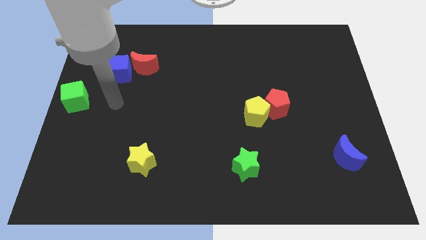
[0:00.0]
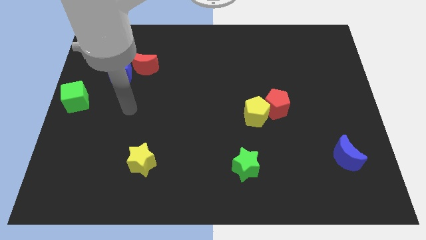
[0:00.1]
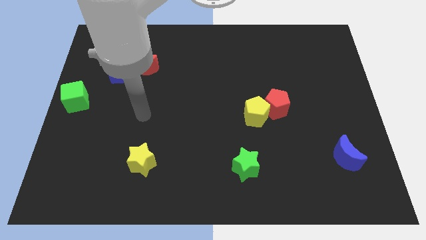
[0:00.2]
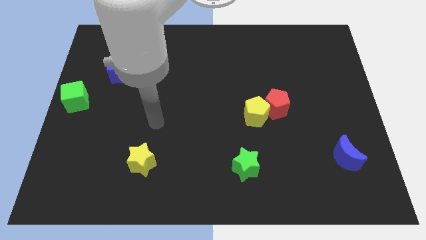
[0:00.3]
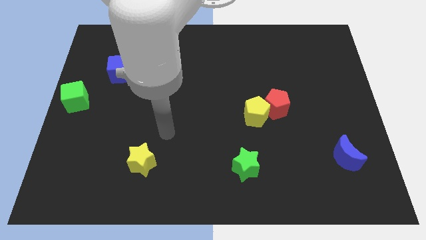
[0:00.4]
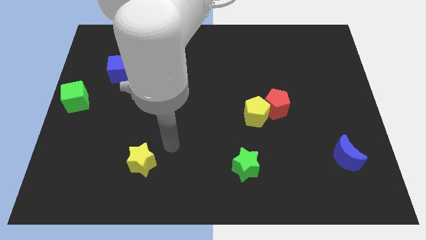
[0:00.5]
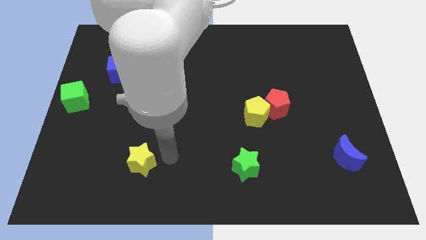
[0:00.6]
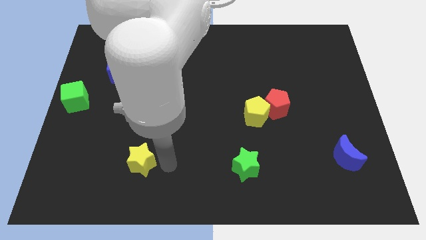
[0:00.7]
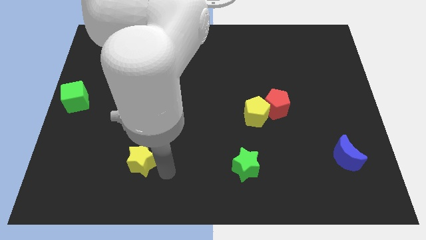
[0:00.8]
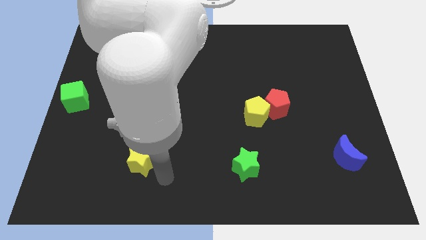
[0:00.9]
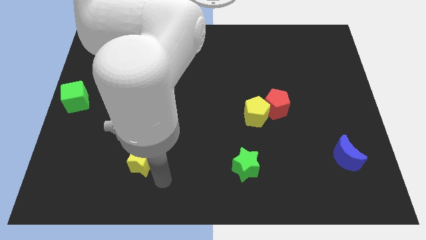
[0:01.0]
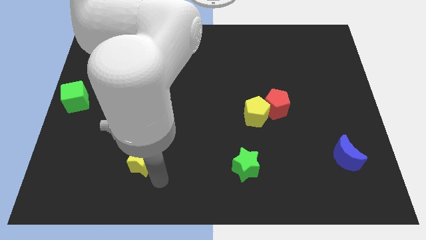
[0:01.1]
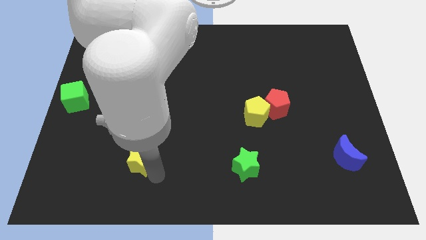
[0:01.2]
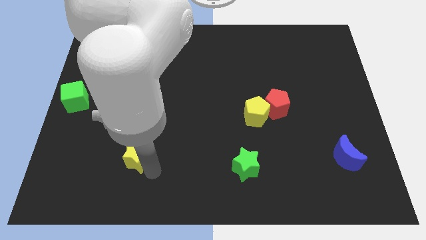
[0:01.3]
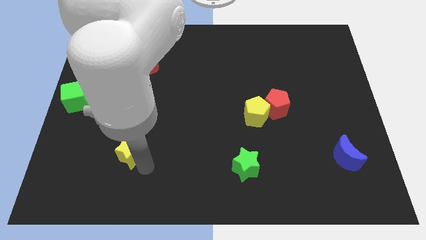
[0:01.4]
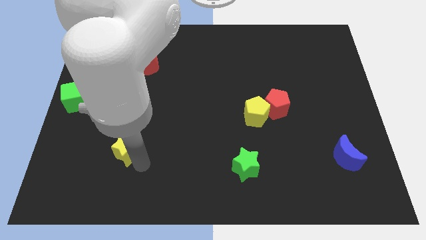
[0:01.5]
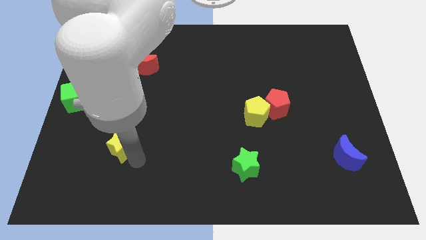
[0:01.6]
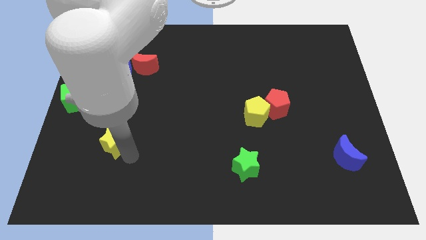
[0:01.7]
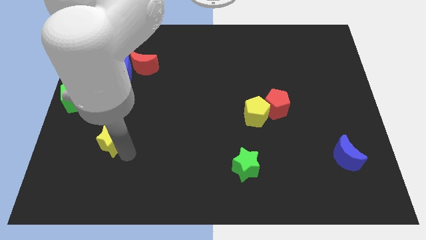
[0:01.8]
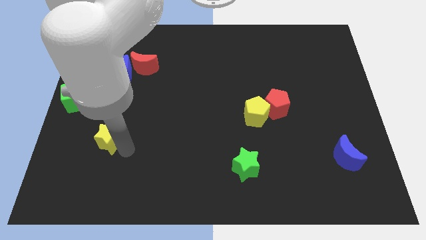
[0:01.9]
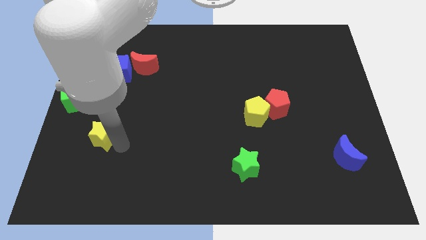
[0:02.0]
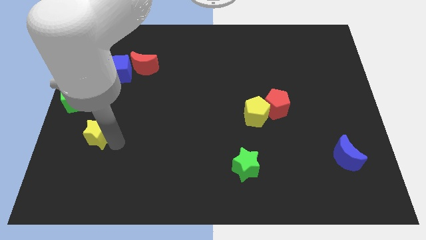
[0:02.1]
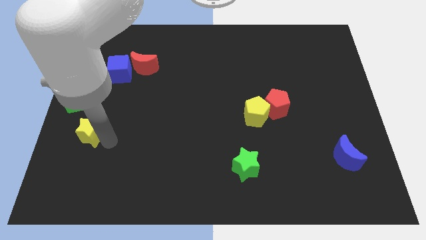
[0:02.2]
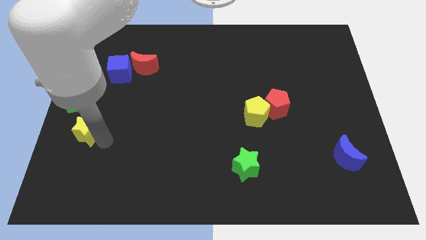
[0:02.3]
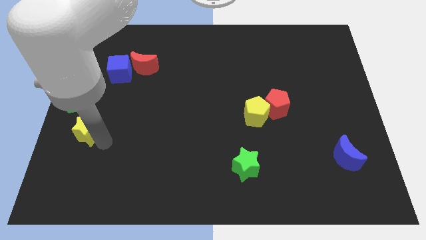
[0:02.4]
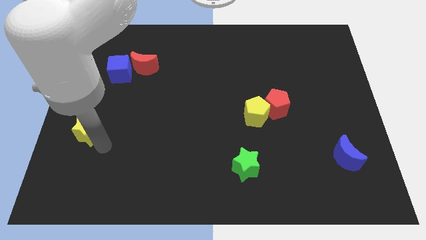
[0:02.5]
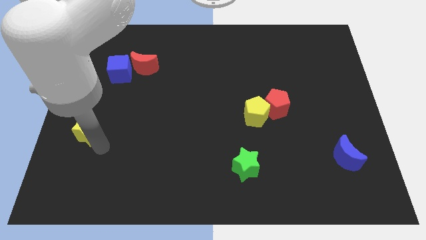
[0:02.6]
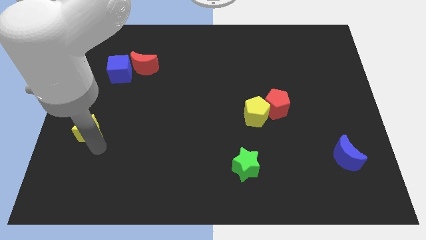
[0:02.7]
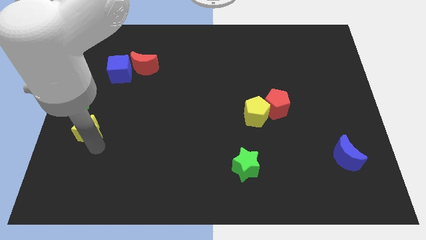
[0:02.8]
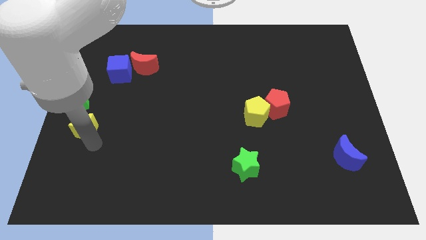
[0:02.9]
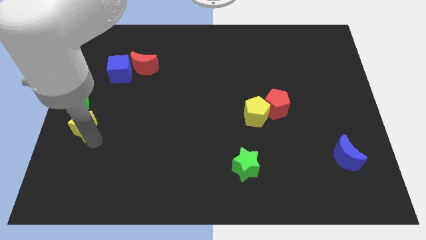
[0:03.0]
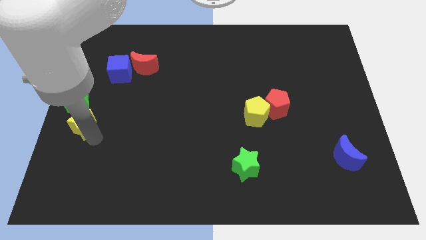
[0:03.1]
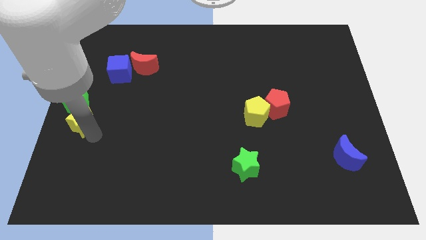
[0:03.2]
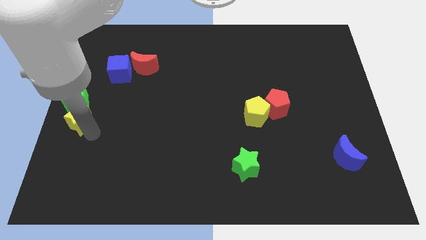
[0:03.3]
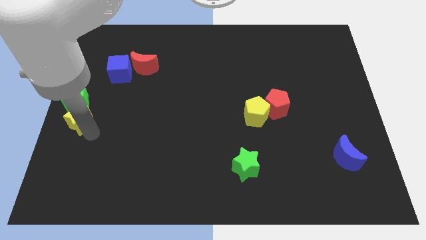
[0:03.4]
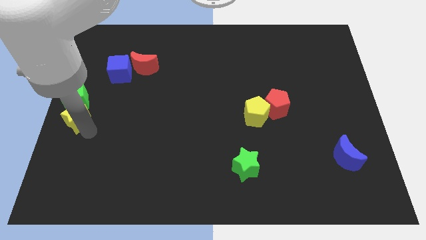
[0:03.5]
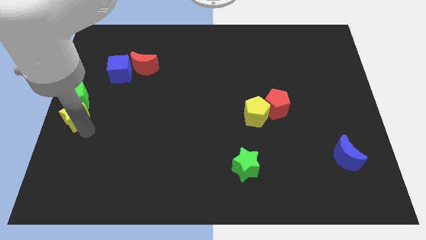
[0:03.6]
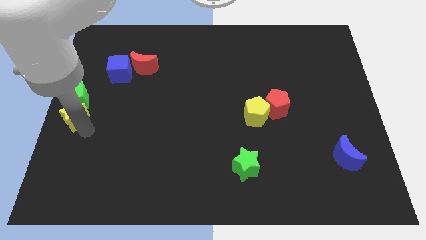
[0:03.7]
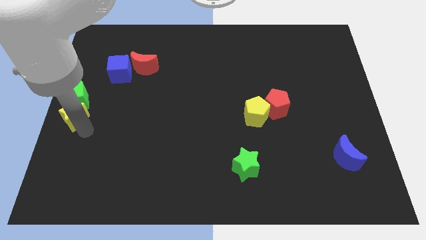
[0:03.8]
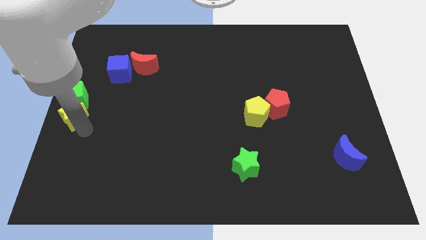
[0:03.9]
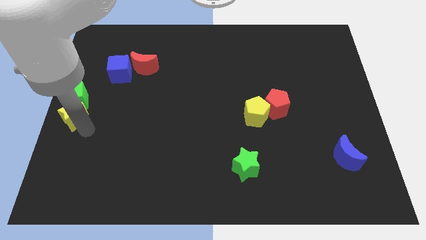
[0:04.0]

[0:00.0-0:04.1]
push the yellow star diagonally bottom left to the blue cube

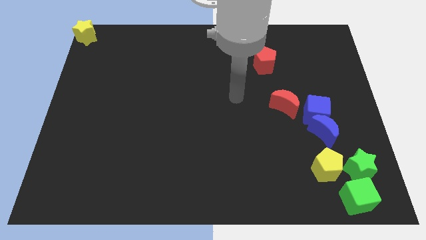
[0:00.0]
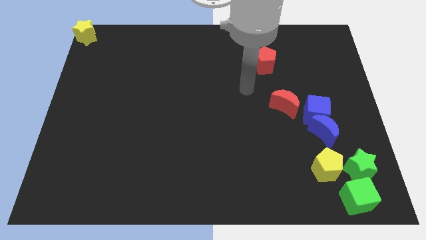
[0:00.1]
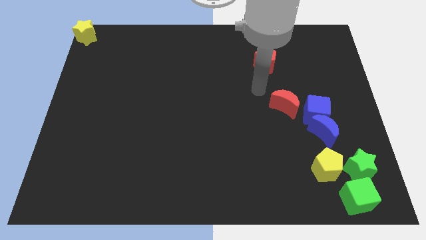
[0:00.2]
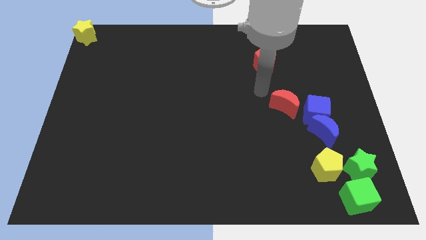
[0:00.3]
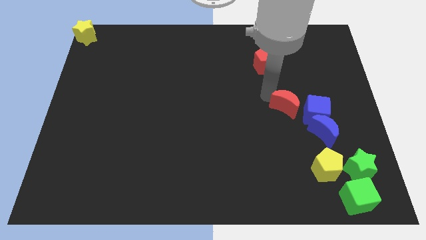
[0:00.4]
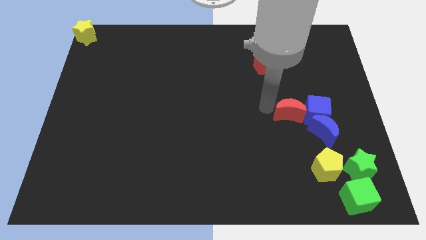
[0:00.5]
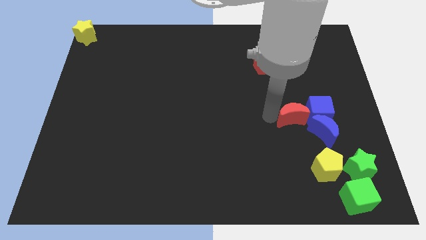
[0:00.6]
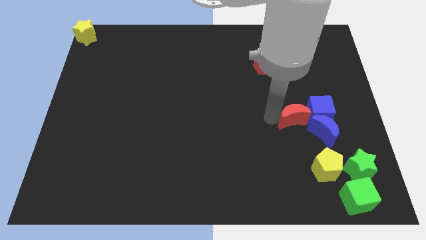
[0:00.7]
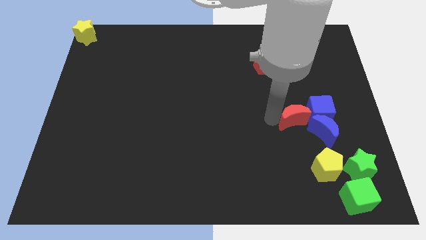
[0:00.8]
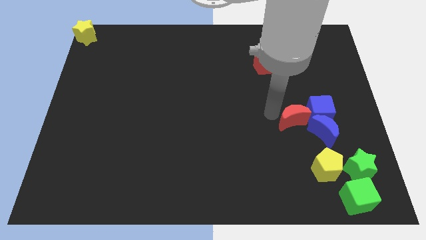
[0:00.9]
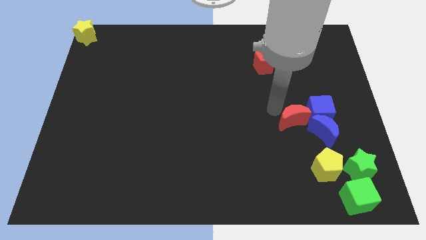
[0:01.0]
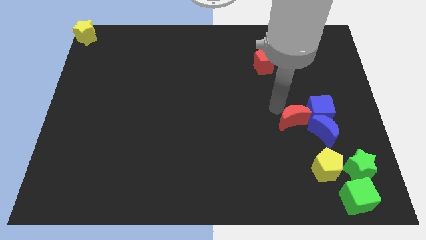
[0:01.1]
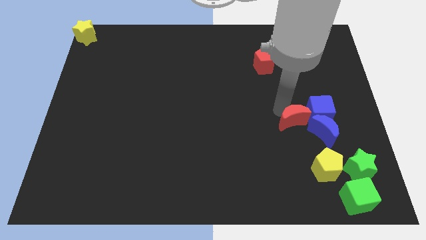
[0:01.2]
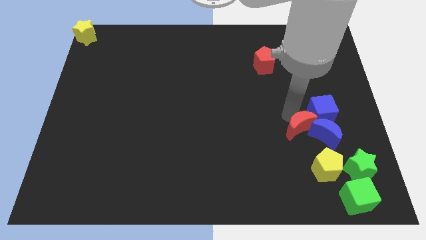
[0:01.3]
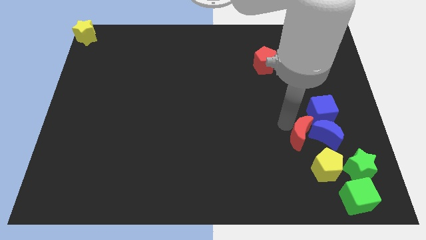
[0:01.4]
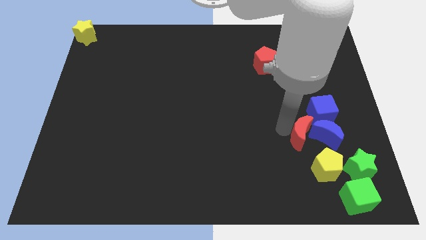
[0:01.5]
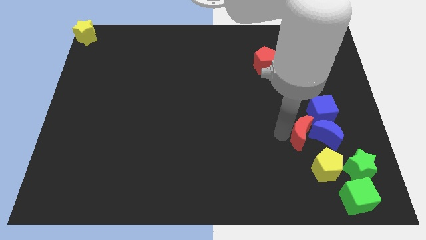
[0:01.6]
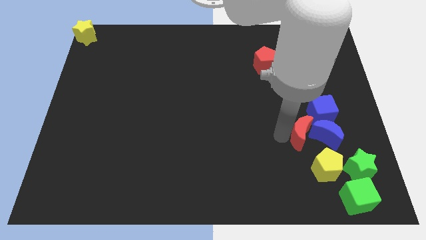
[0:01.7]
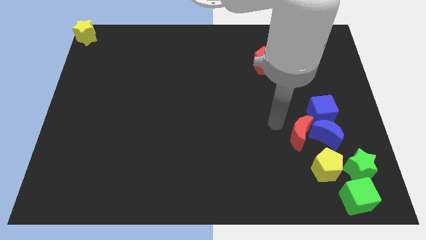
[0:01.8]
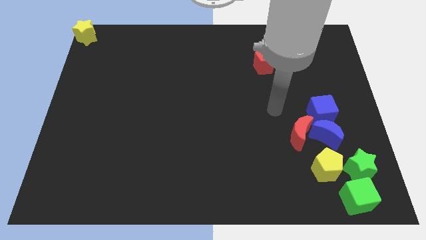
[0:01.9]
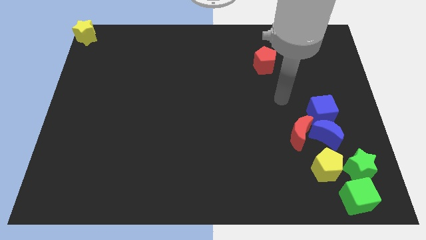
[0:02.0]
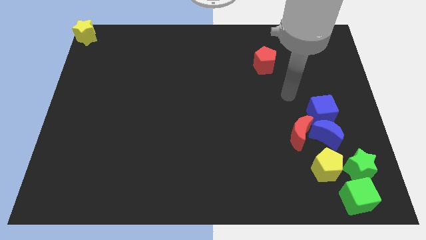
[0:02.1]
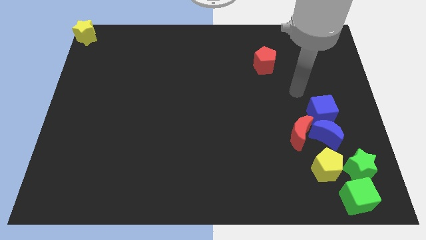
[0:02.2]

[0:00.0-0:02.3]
push the red moon into blue moon

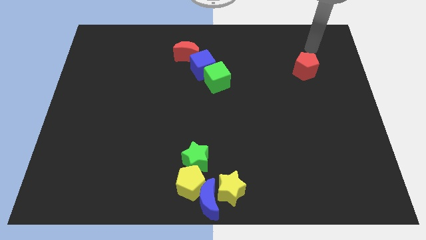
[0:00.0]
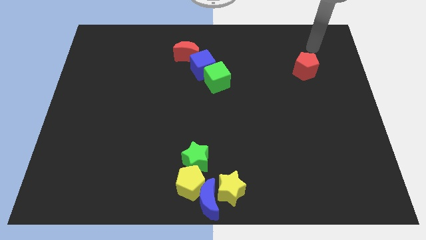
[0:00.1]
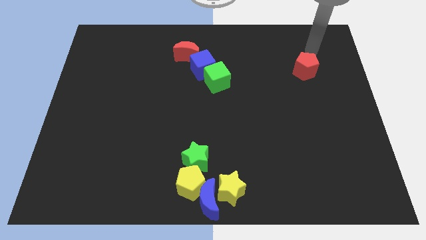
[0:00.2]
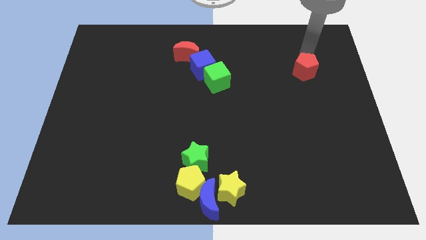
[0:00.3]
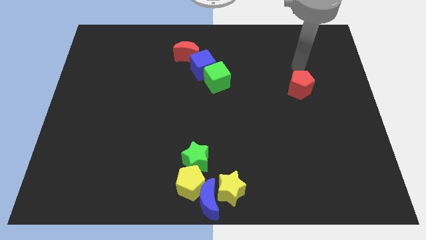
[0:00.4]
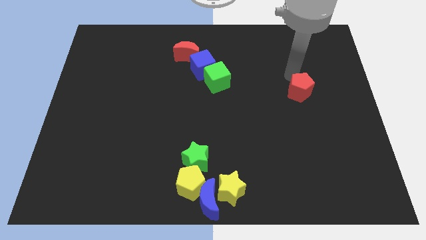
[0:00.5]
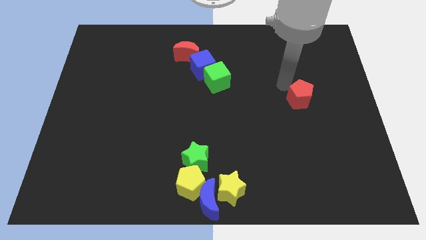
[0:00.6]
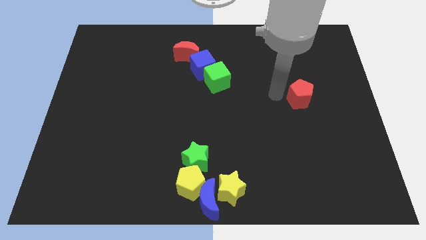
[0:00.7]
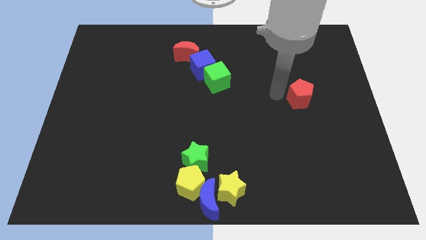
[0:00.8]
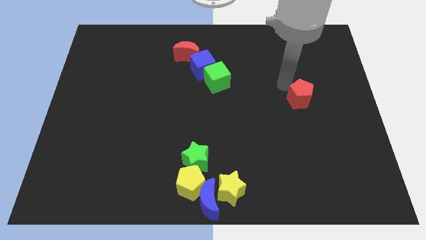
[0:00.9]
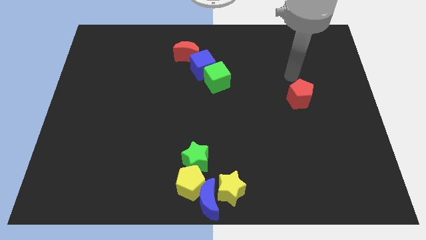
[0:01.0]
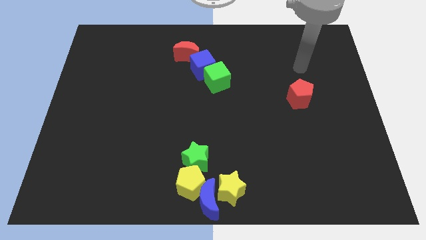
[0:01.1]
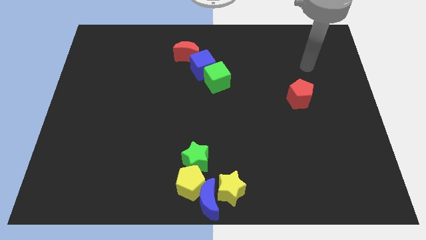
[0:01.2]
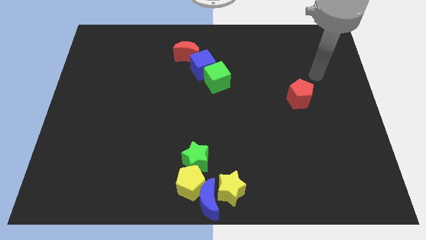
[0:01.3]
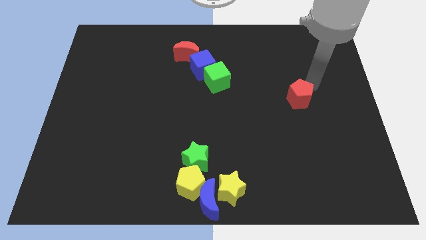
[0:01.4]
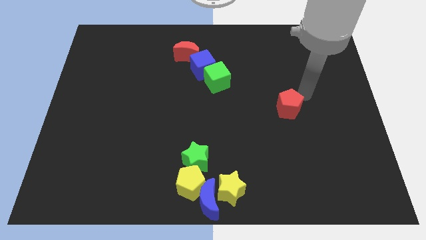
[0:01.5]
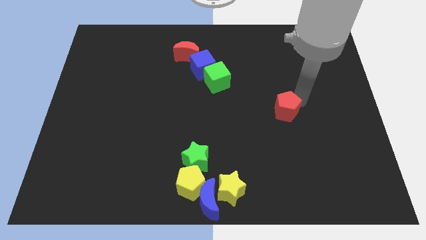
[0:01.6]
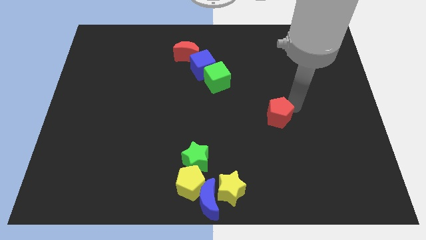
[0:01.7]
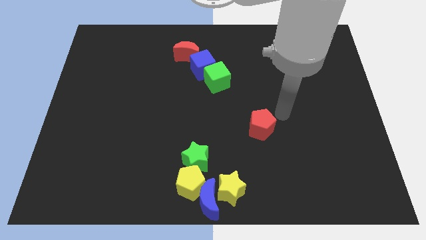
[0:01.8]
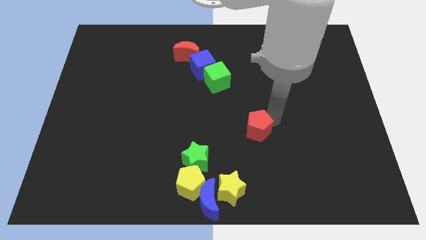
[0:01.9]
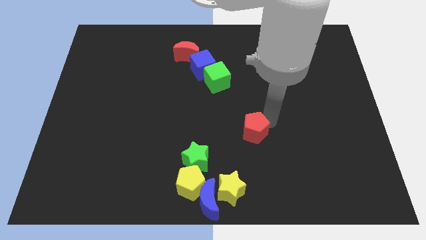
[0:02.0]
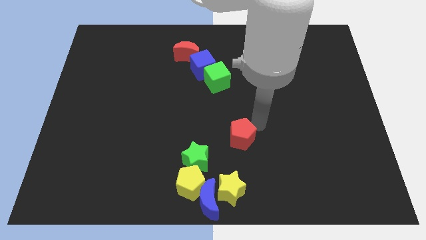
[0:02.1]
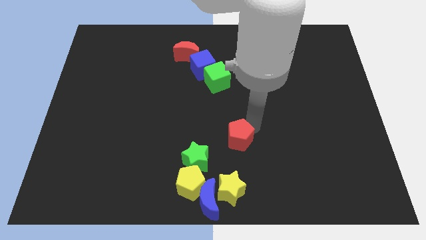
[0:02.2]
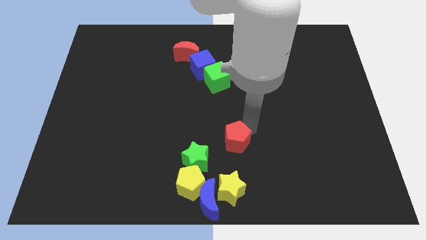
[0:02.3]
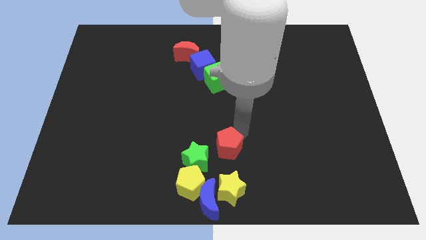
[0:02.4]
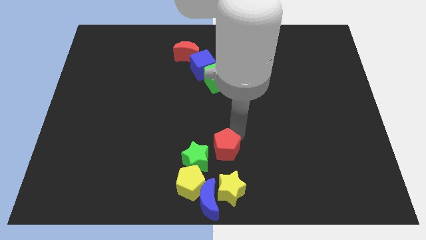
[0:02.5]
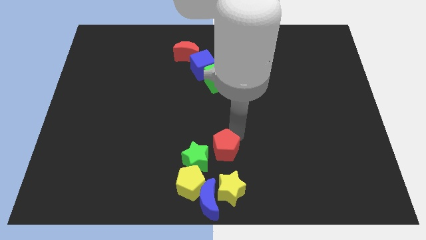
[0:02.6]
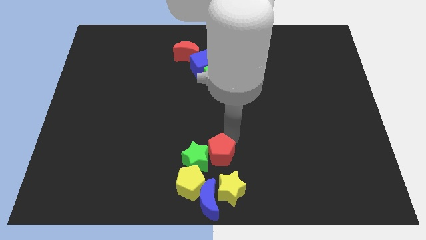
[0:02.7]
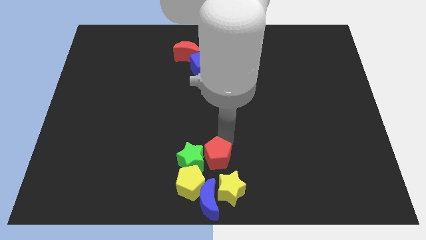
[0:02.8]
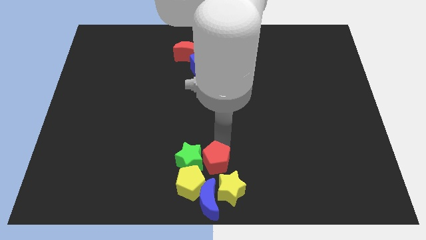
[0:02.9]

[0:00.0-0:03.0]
push the red pentagon into the green star
